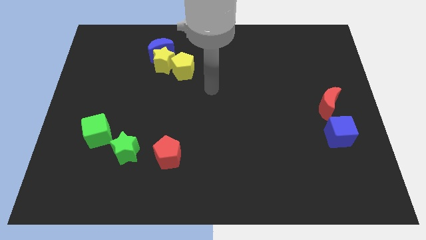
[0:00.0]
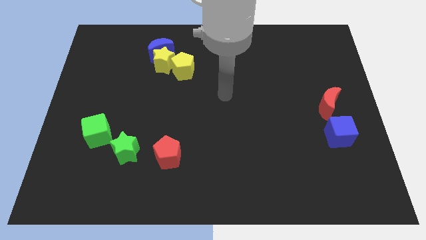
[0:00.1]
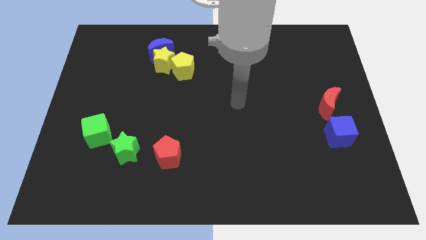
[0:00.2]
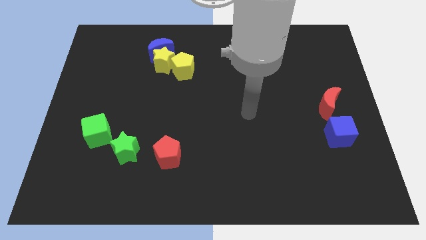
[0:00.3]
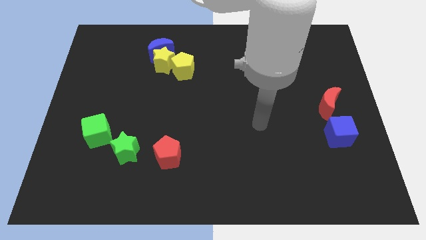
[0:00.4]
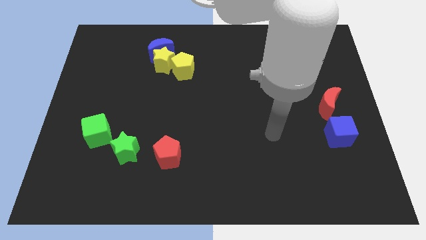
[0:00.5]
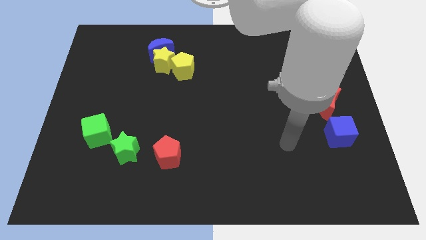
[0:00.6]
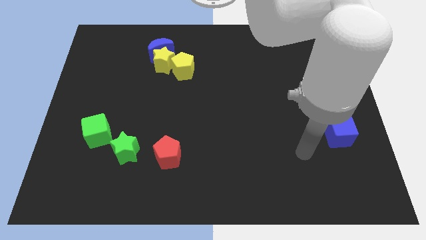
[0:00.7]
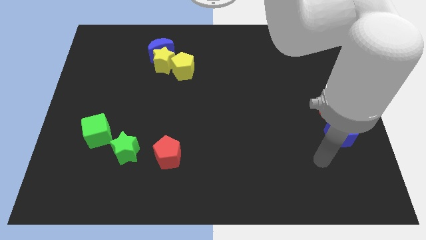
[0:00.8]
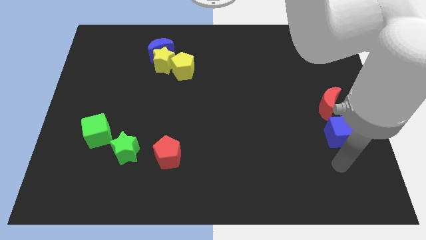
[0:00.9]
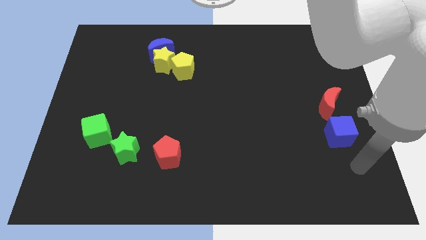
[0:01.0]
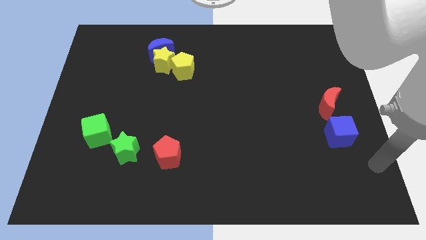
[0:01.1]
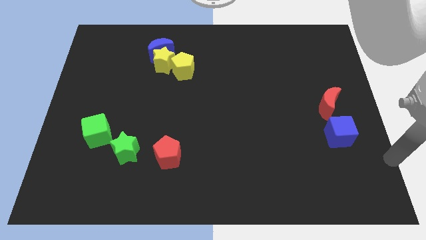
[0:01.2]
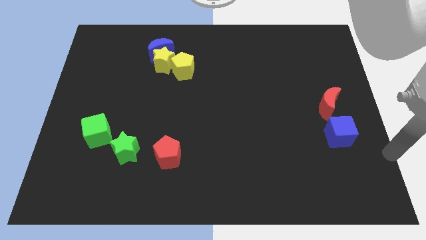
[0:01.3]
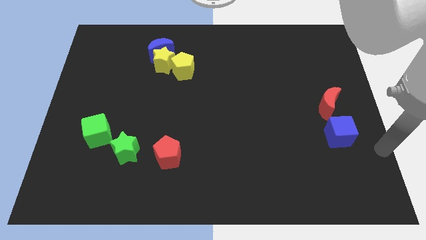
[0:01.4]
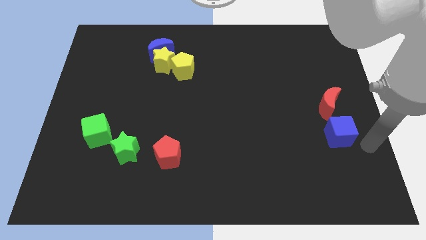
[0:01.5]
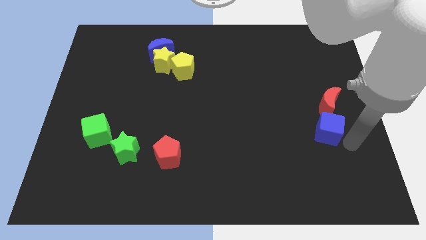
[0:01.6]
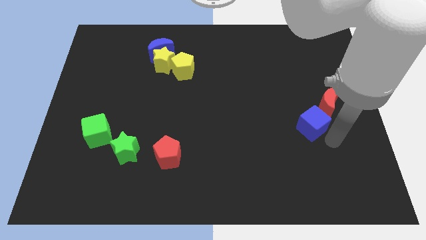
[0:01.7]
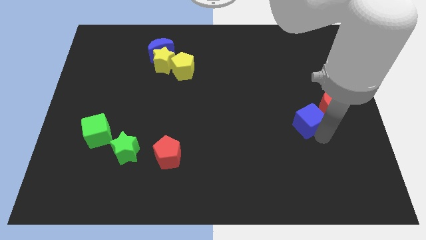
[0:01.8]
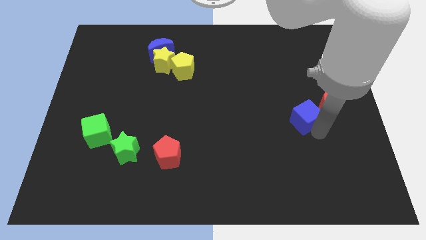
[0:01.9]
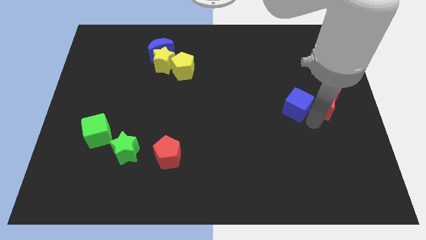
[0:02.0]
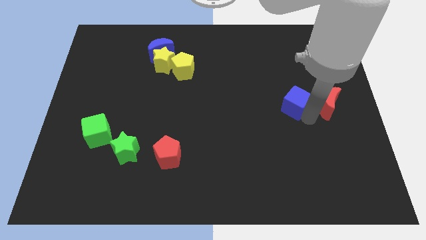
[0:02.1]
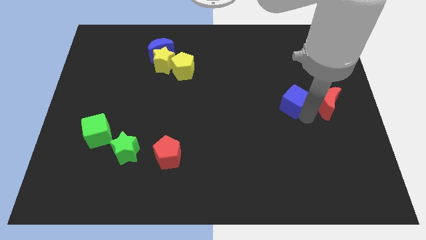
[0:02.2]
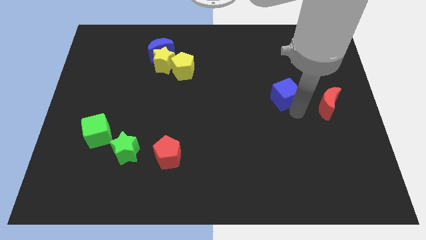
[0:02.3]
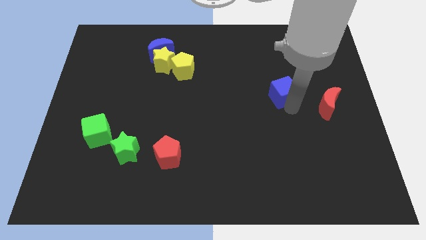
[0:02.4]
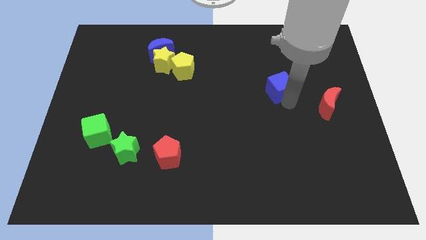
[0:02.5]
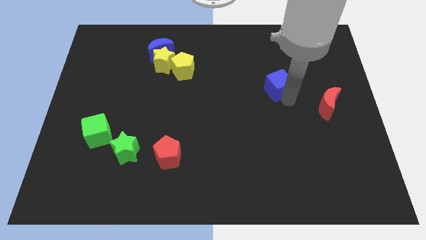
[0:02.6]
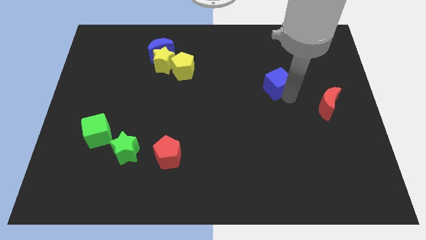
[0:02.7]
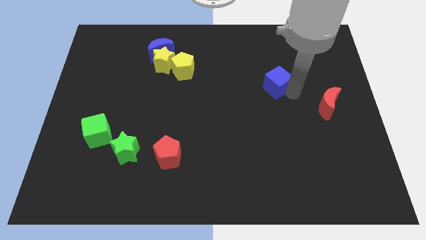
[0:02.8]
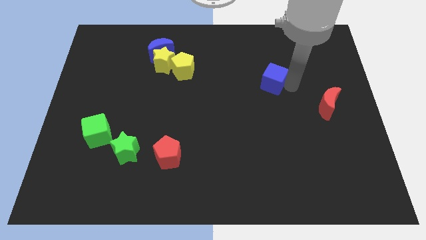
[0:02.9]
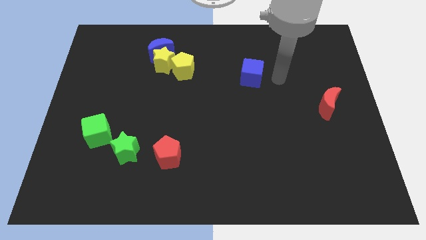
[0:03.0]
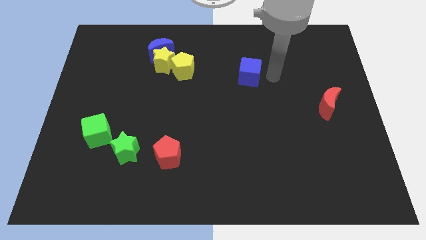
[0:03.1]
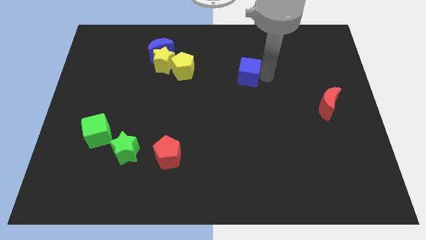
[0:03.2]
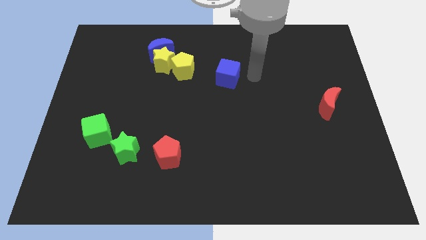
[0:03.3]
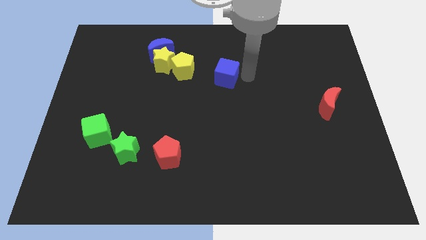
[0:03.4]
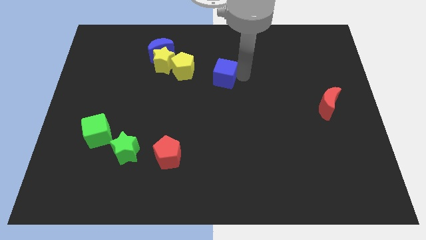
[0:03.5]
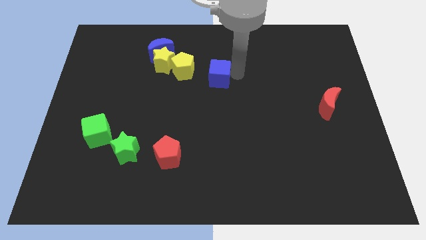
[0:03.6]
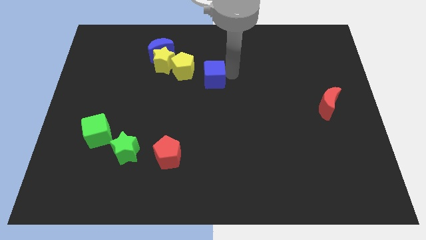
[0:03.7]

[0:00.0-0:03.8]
push the blue cube to the top right of the red pentagon

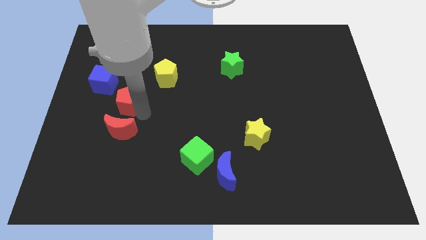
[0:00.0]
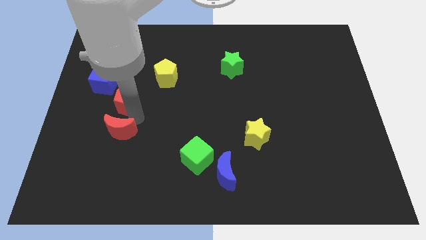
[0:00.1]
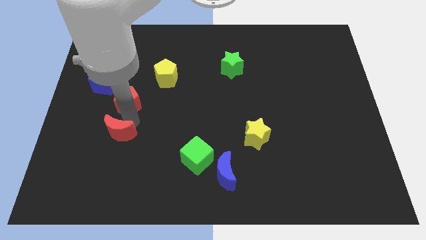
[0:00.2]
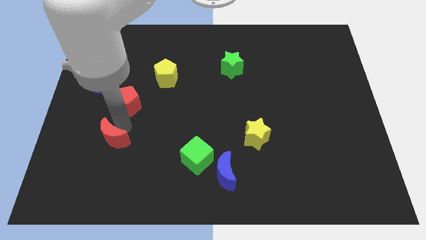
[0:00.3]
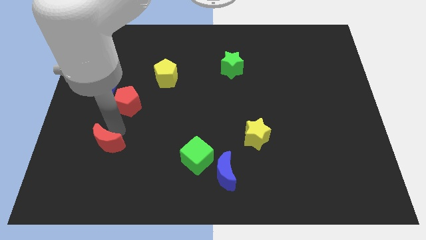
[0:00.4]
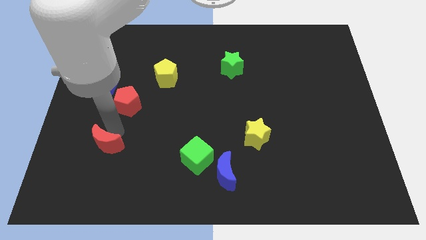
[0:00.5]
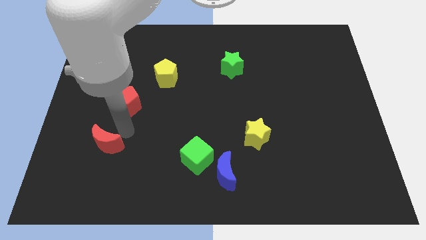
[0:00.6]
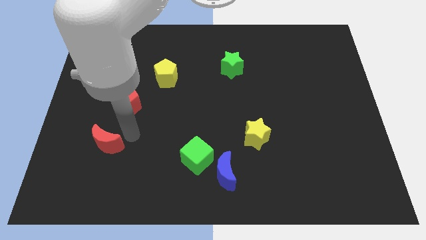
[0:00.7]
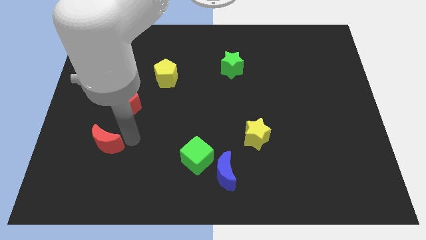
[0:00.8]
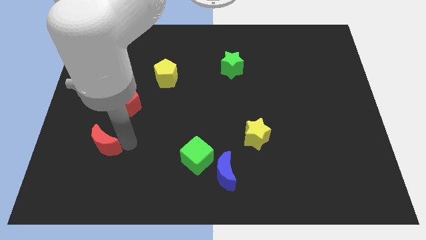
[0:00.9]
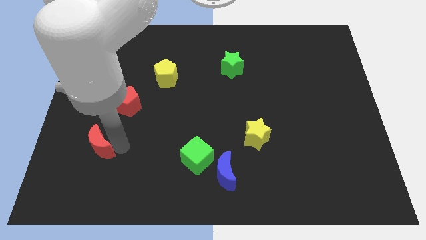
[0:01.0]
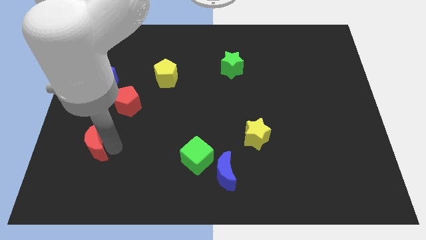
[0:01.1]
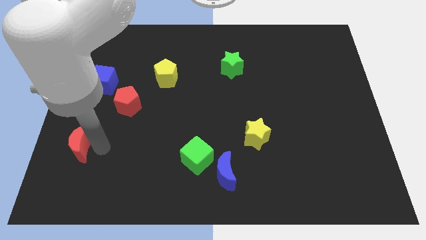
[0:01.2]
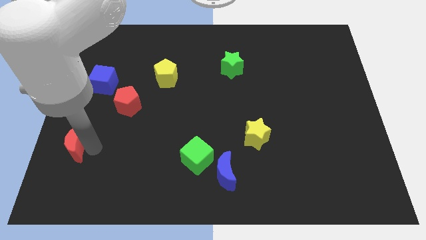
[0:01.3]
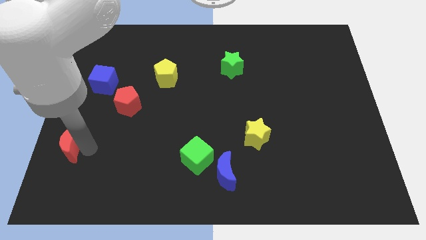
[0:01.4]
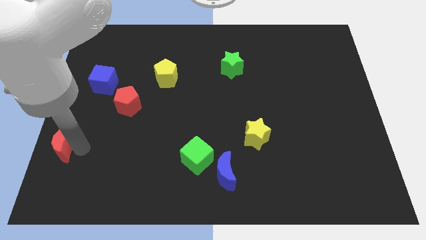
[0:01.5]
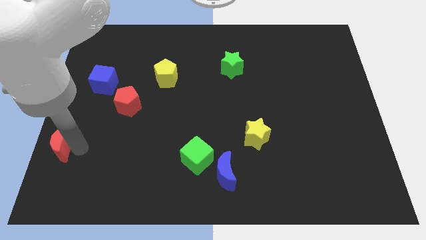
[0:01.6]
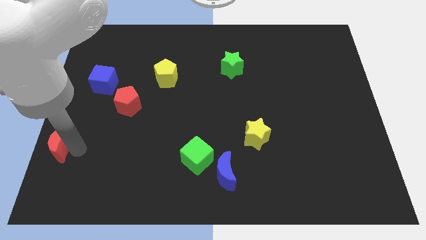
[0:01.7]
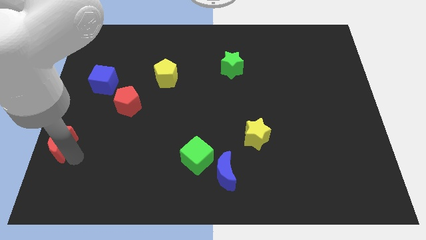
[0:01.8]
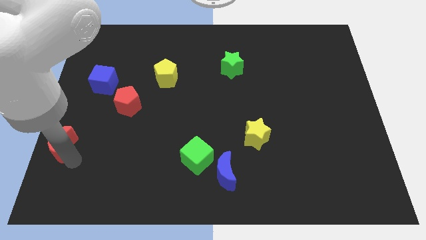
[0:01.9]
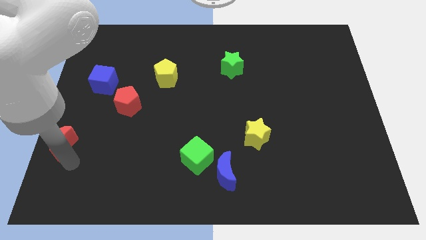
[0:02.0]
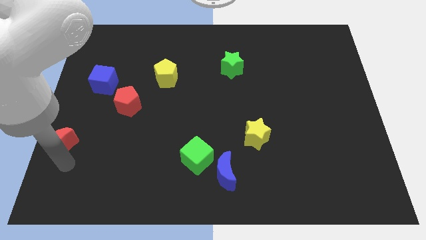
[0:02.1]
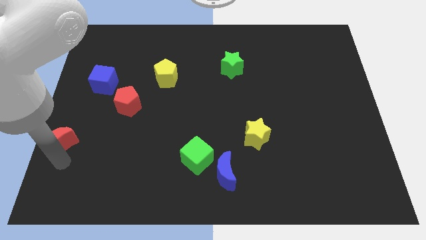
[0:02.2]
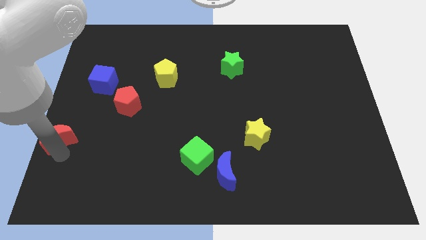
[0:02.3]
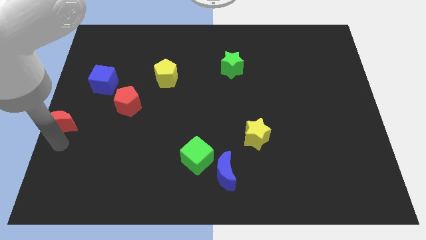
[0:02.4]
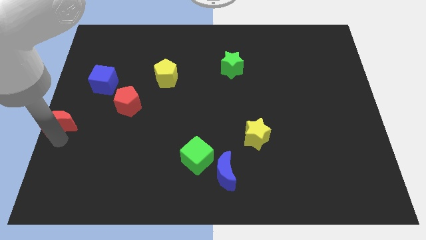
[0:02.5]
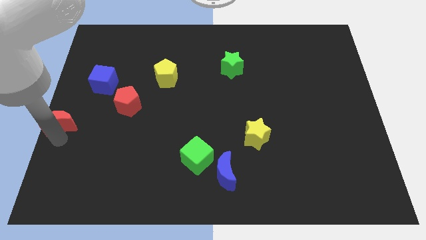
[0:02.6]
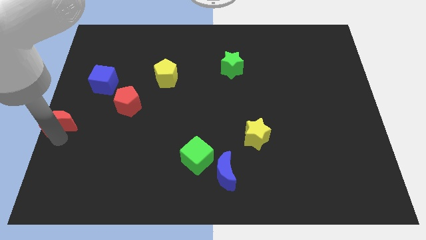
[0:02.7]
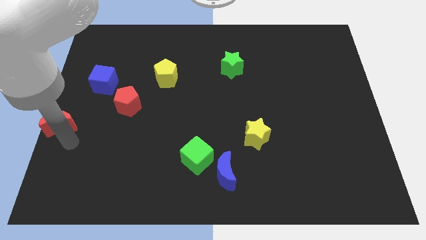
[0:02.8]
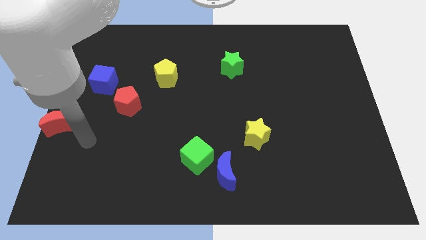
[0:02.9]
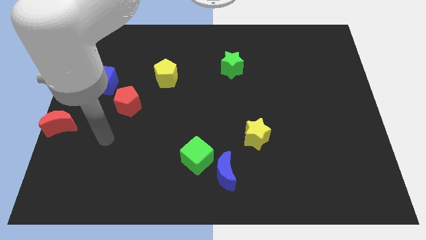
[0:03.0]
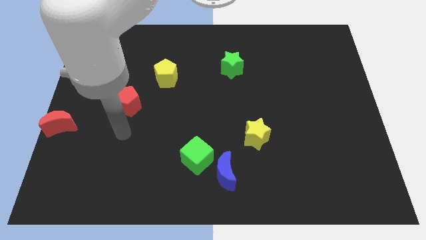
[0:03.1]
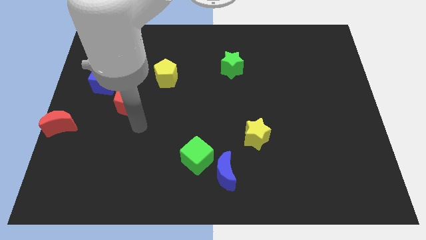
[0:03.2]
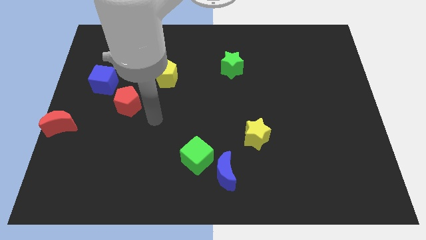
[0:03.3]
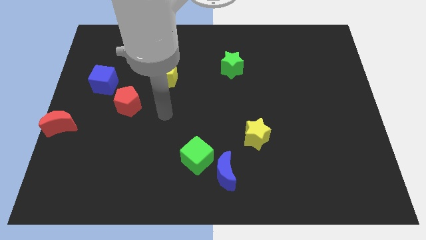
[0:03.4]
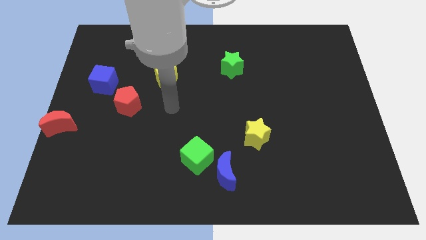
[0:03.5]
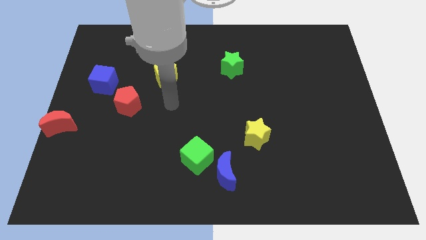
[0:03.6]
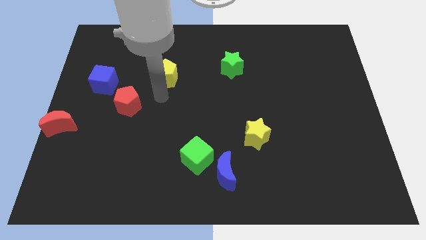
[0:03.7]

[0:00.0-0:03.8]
push the red moon towards the left side of the board

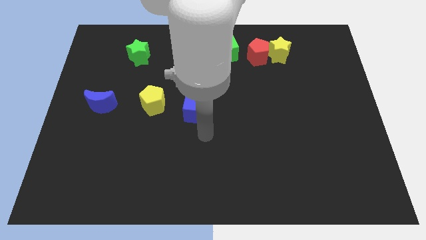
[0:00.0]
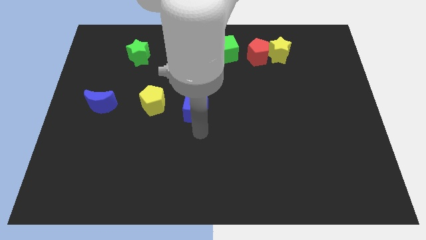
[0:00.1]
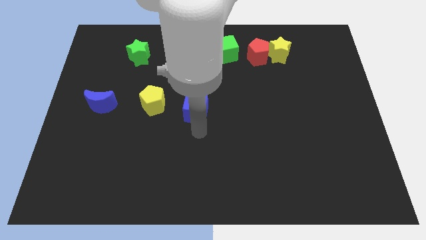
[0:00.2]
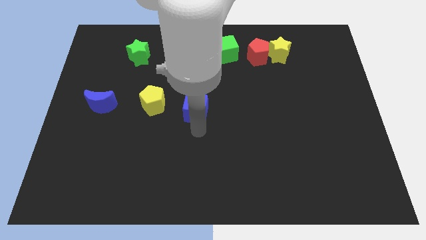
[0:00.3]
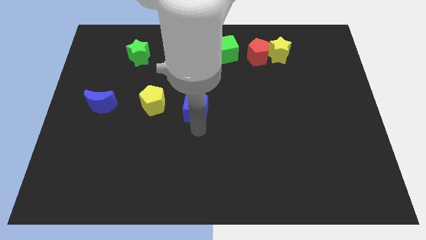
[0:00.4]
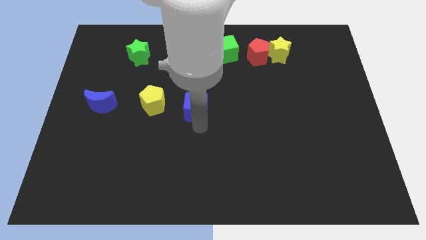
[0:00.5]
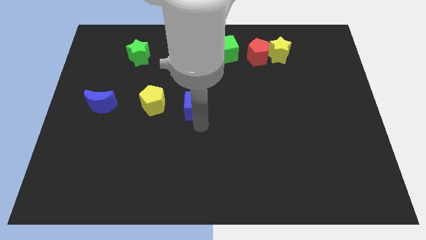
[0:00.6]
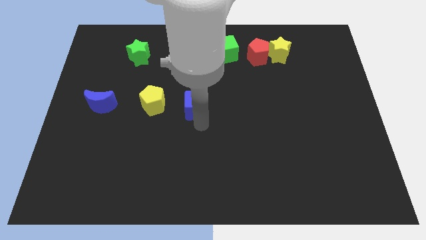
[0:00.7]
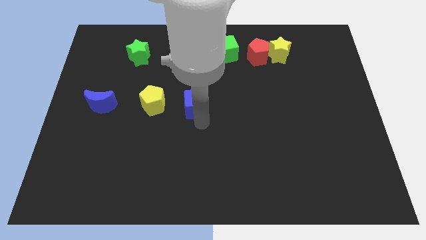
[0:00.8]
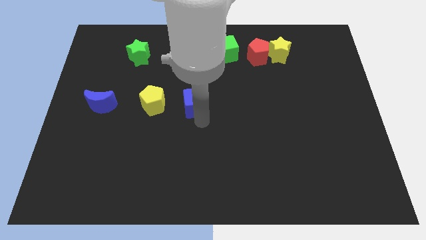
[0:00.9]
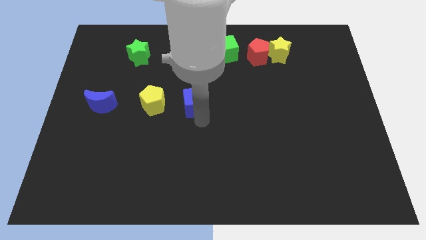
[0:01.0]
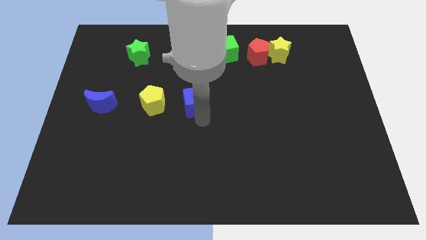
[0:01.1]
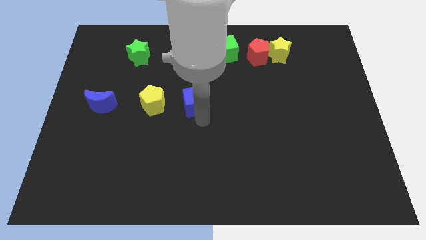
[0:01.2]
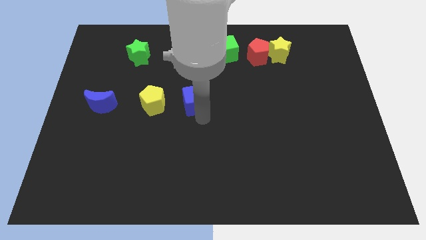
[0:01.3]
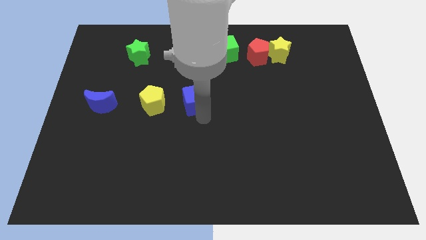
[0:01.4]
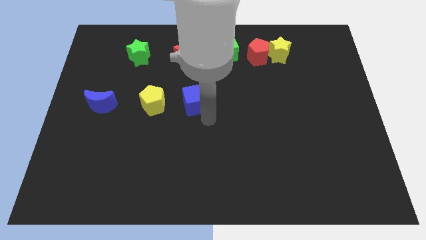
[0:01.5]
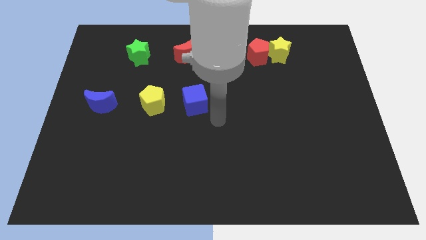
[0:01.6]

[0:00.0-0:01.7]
place the blue cube beside the yellow pentagon
